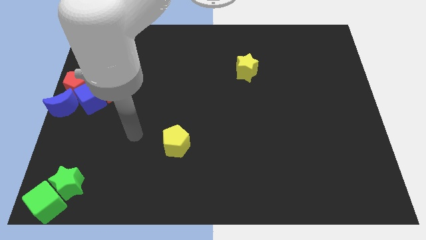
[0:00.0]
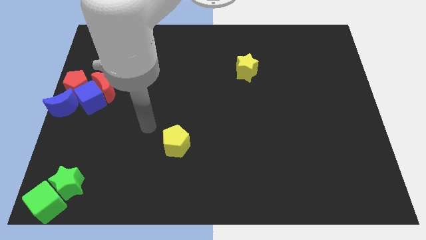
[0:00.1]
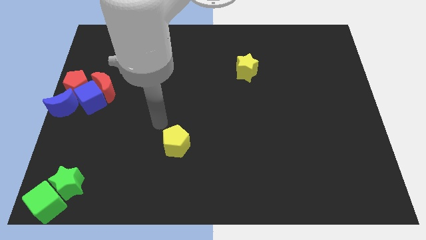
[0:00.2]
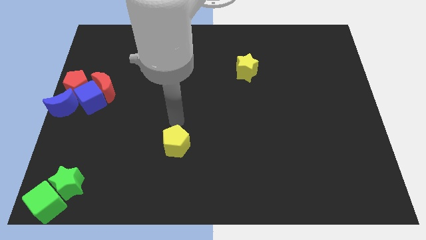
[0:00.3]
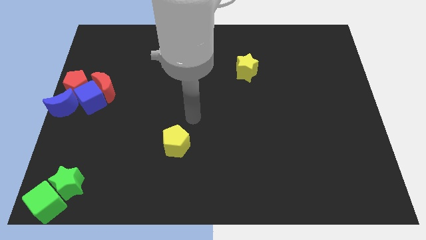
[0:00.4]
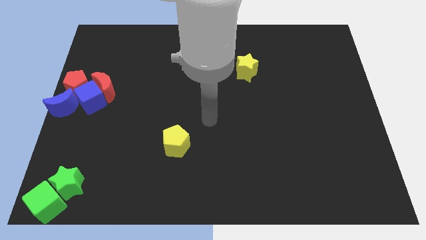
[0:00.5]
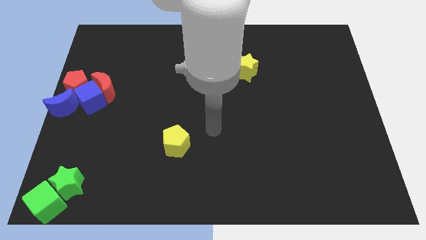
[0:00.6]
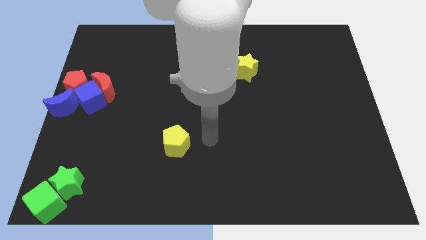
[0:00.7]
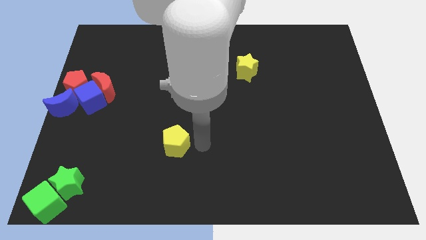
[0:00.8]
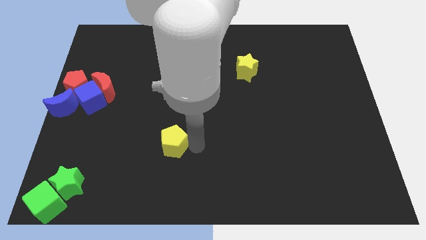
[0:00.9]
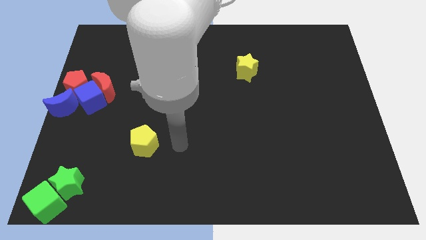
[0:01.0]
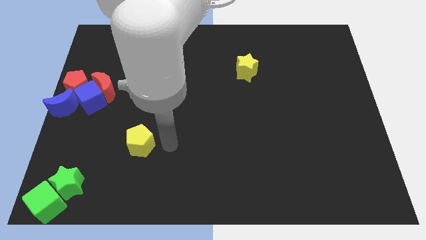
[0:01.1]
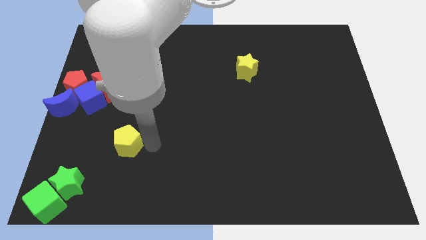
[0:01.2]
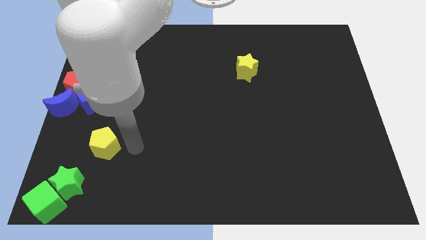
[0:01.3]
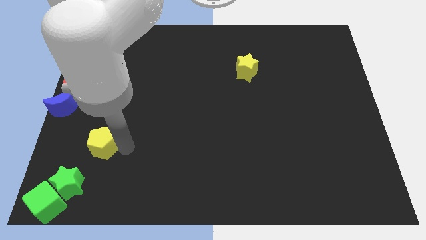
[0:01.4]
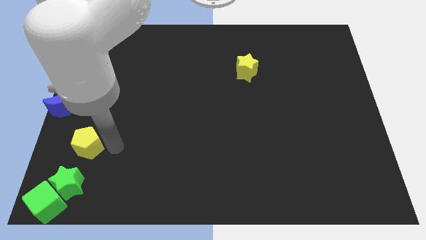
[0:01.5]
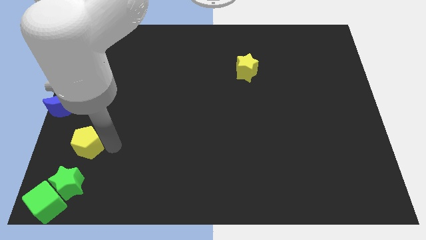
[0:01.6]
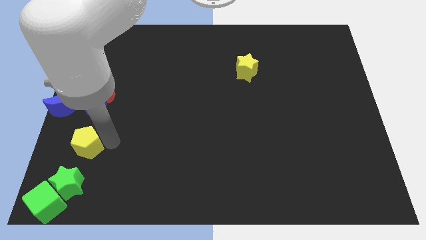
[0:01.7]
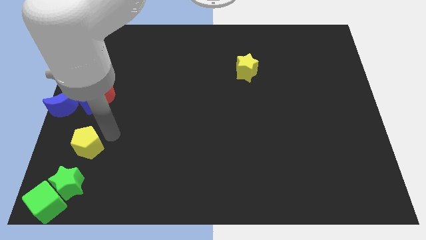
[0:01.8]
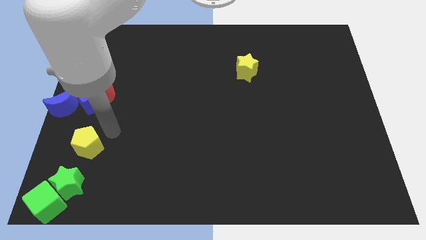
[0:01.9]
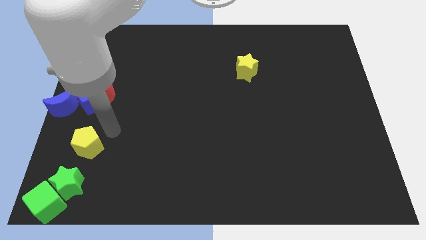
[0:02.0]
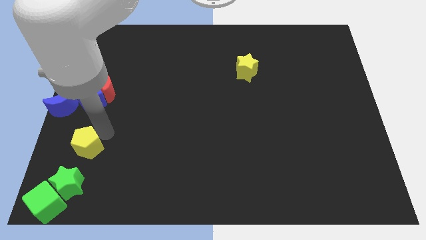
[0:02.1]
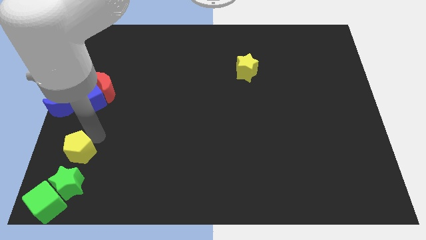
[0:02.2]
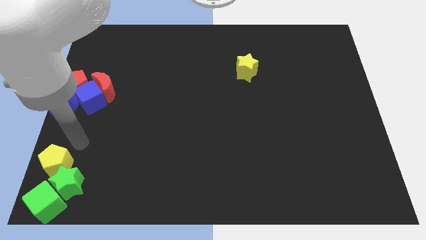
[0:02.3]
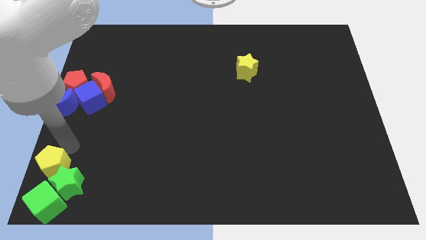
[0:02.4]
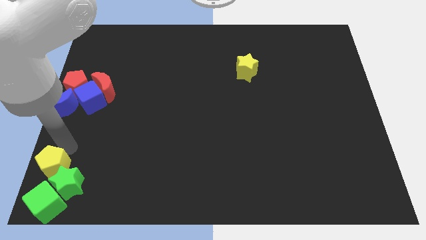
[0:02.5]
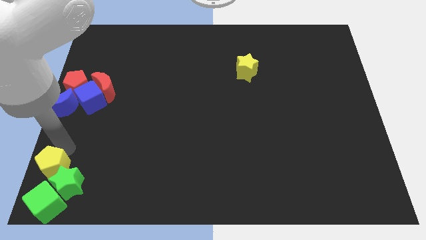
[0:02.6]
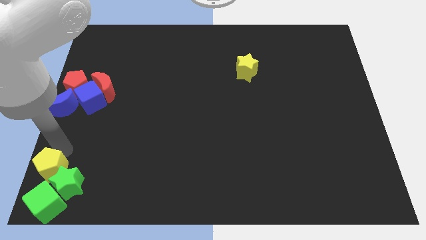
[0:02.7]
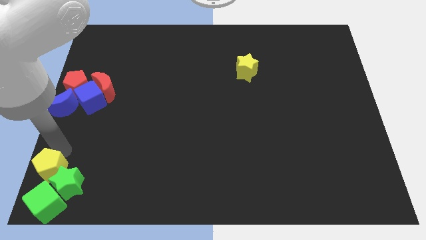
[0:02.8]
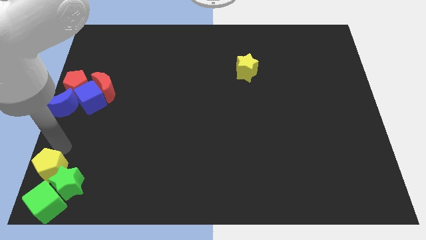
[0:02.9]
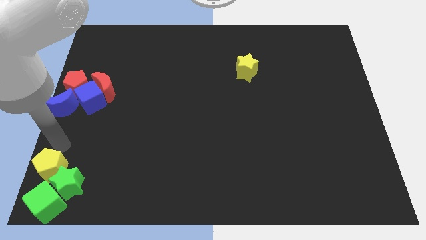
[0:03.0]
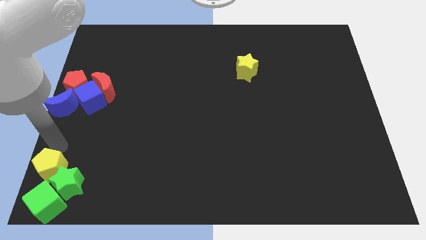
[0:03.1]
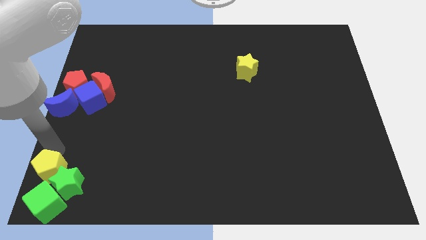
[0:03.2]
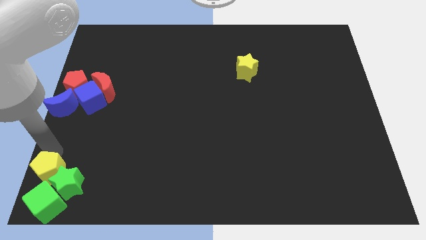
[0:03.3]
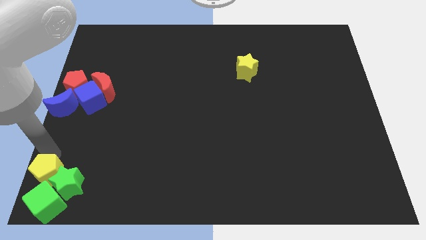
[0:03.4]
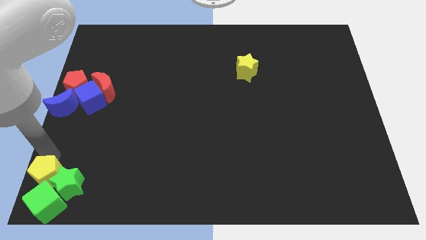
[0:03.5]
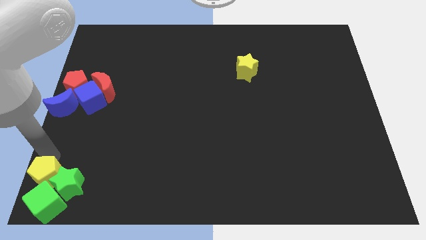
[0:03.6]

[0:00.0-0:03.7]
add the yellow pentagon into the green blocks

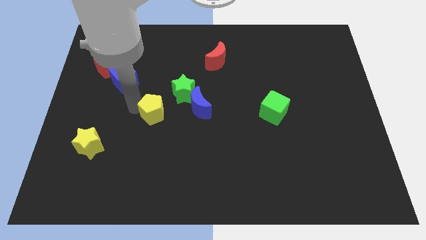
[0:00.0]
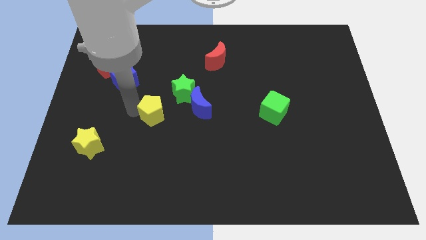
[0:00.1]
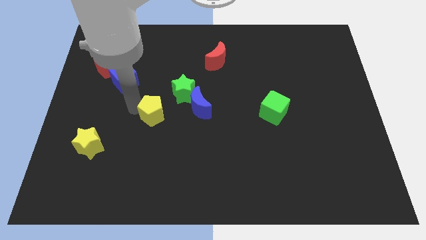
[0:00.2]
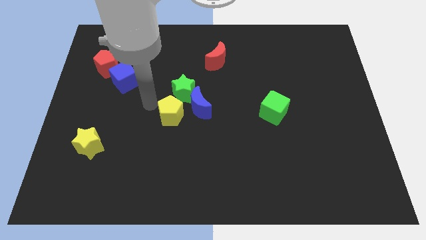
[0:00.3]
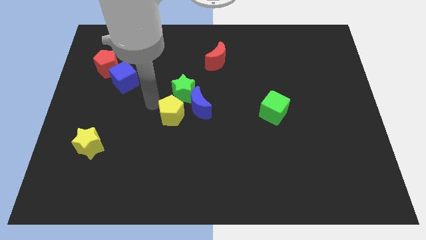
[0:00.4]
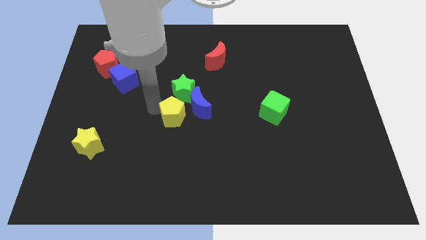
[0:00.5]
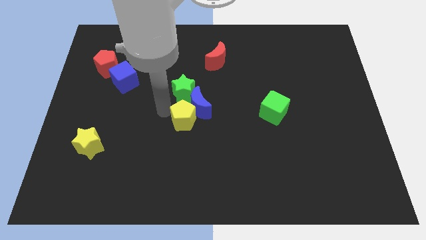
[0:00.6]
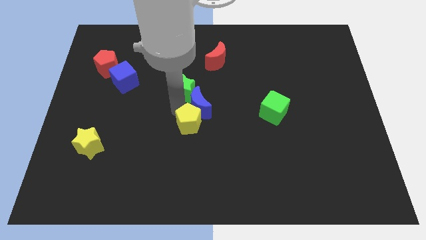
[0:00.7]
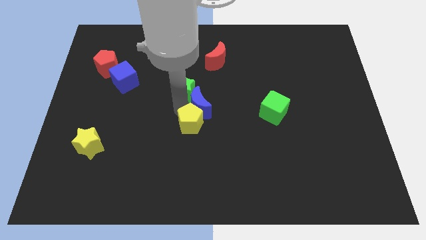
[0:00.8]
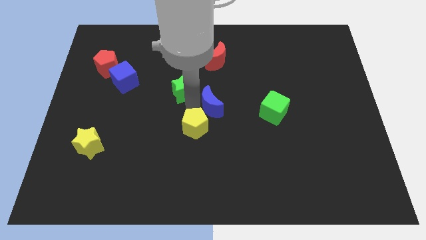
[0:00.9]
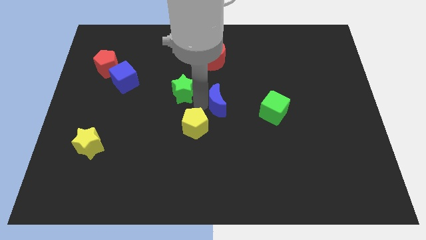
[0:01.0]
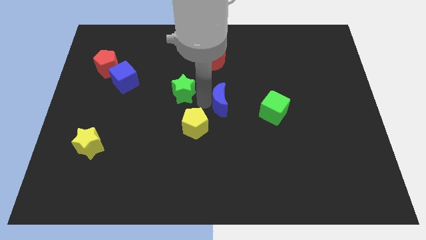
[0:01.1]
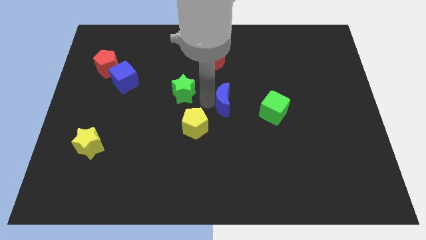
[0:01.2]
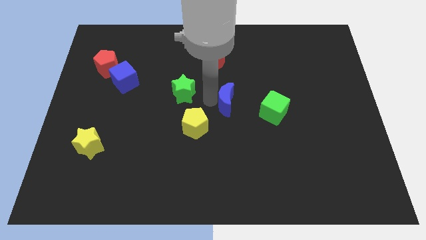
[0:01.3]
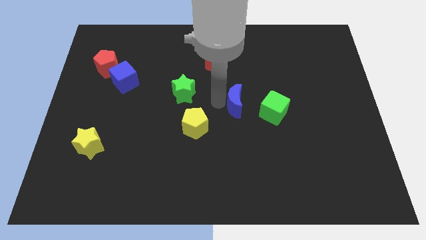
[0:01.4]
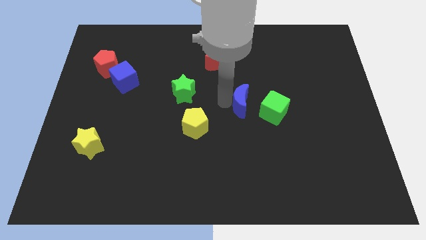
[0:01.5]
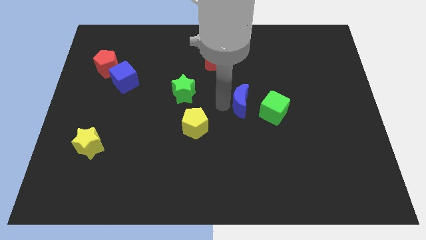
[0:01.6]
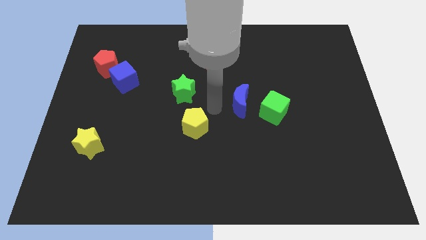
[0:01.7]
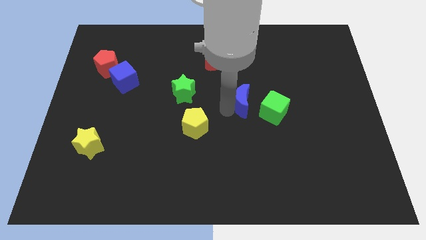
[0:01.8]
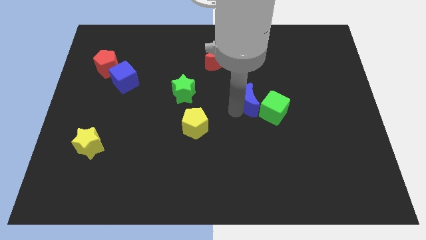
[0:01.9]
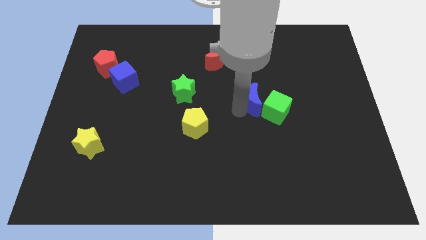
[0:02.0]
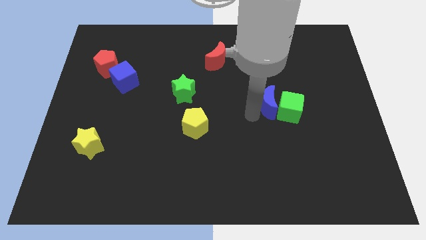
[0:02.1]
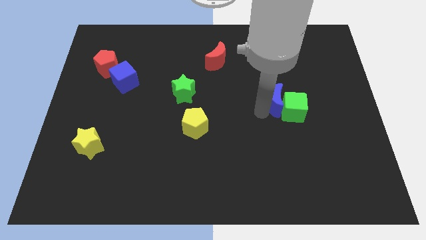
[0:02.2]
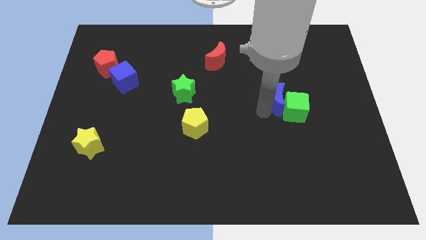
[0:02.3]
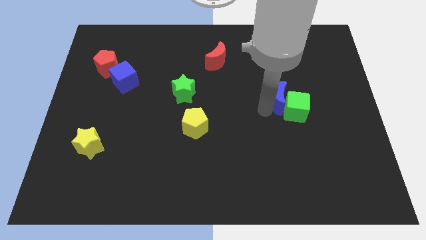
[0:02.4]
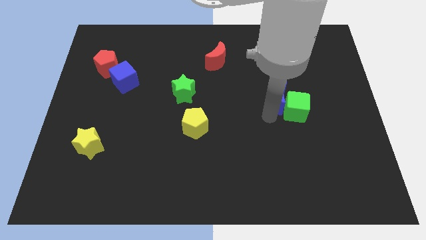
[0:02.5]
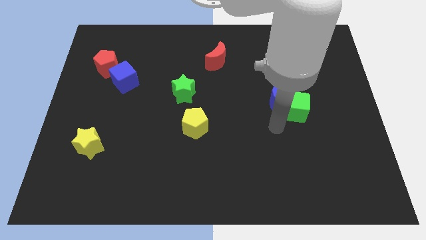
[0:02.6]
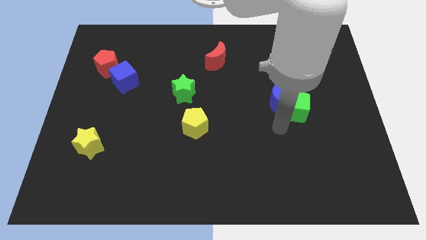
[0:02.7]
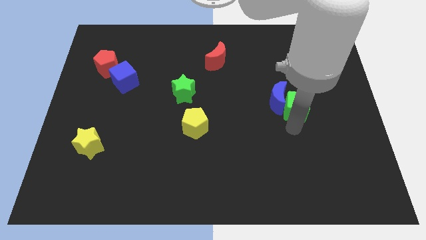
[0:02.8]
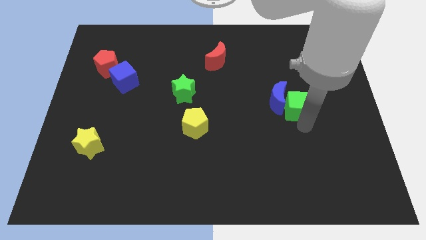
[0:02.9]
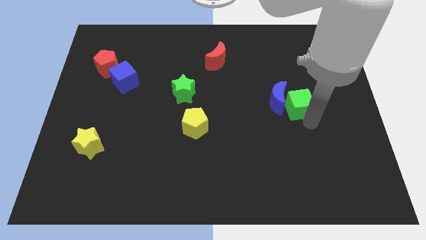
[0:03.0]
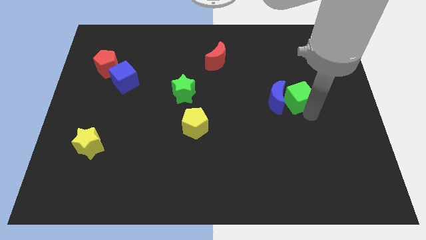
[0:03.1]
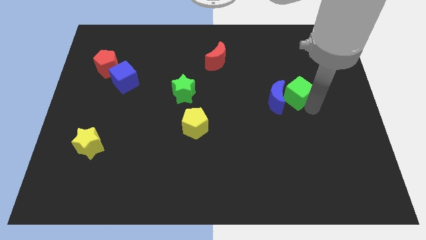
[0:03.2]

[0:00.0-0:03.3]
push the yellow pentagonblue moon and green cube towards the right

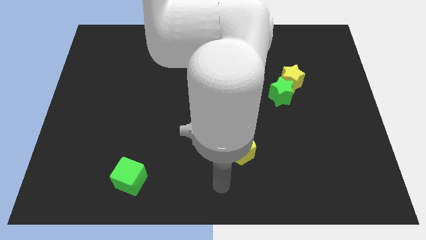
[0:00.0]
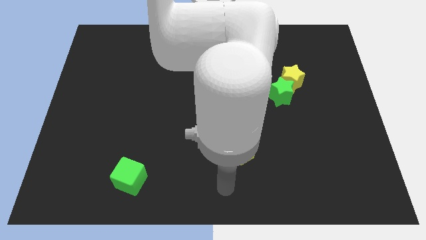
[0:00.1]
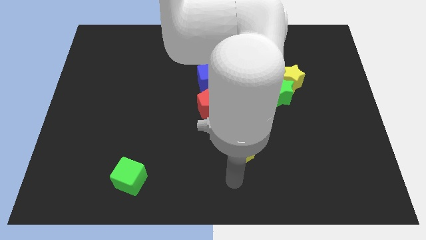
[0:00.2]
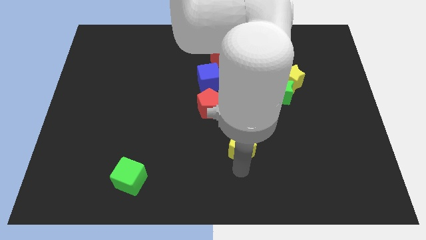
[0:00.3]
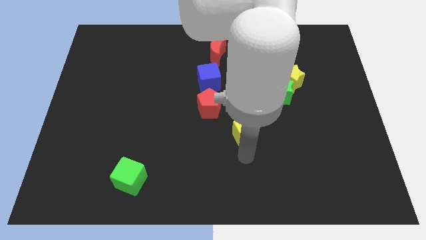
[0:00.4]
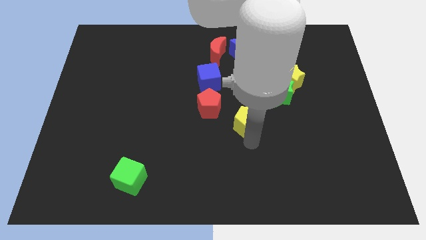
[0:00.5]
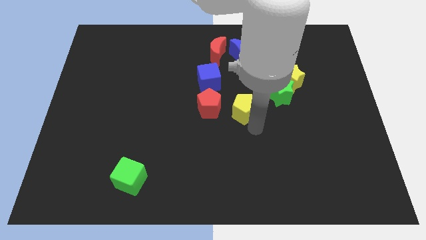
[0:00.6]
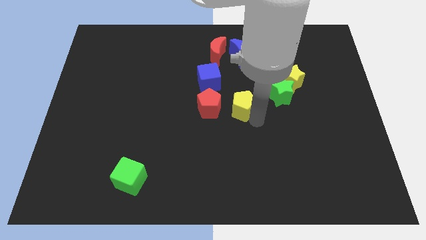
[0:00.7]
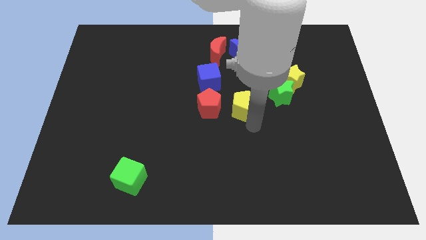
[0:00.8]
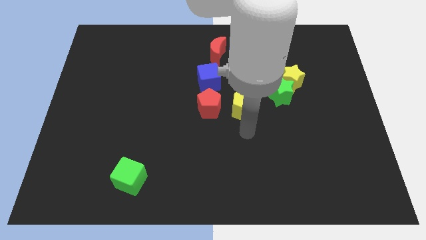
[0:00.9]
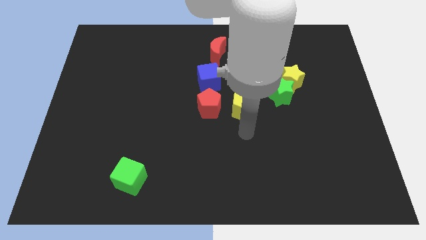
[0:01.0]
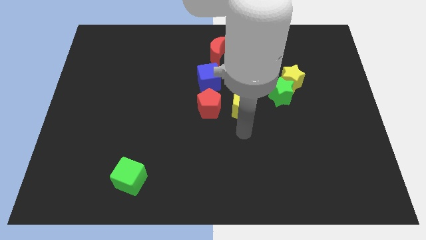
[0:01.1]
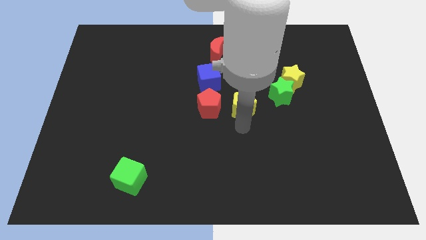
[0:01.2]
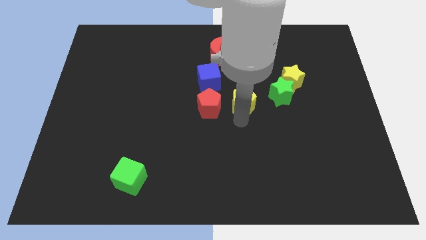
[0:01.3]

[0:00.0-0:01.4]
place the yellow pentagon right to the red pentagon

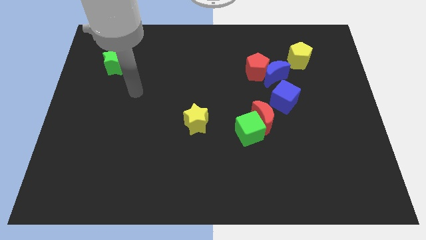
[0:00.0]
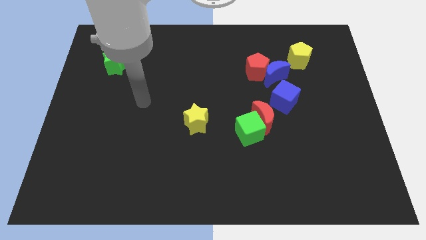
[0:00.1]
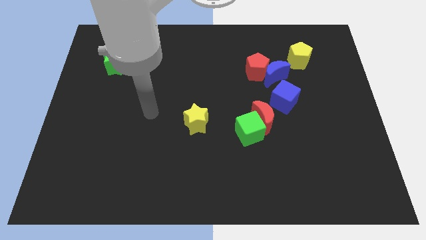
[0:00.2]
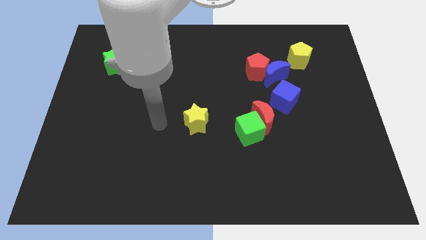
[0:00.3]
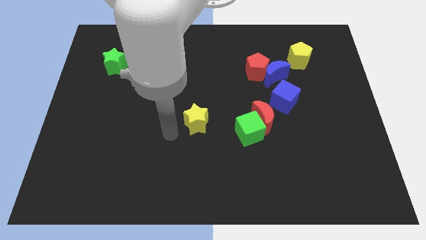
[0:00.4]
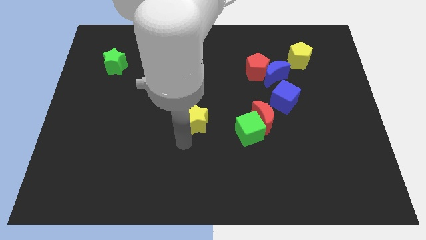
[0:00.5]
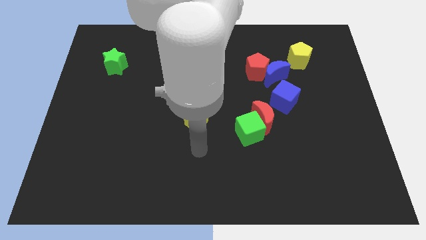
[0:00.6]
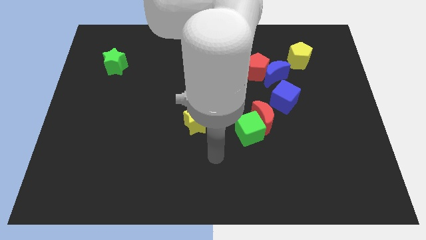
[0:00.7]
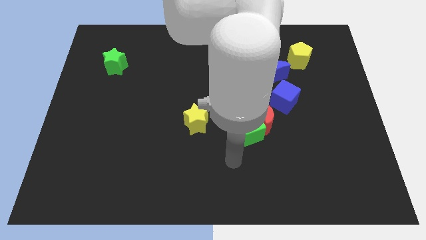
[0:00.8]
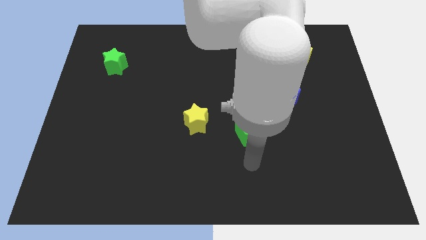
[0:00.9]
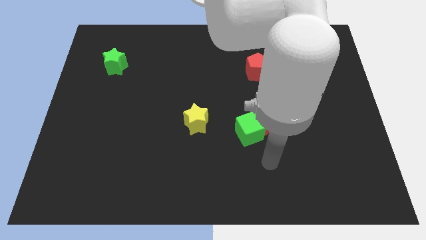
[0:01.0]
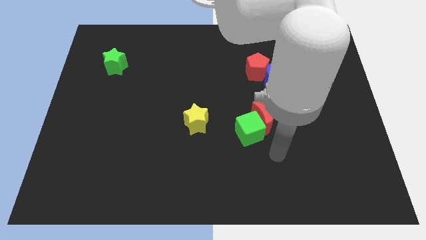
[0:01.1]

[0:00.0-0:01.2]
place your arm to the bottom right side of the blue cube
